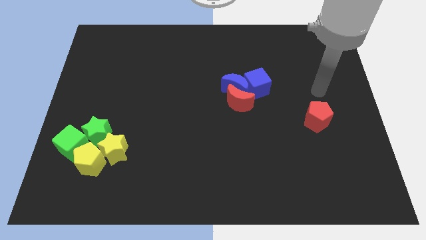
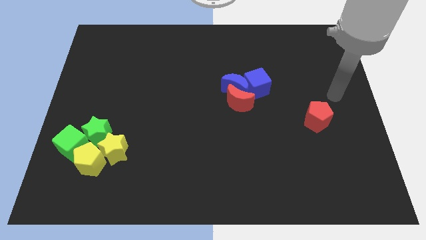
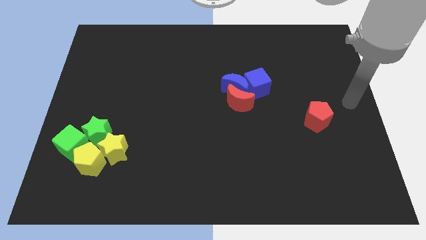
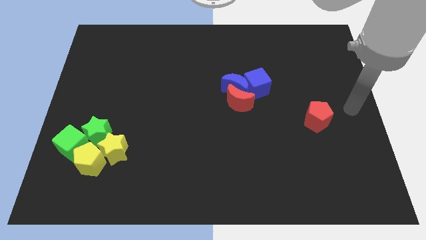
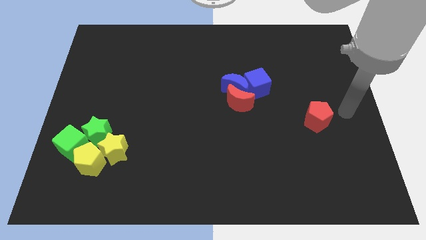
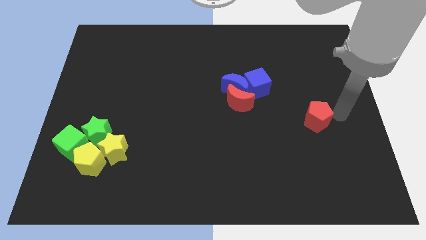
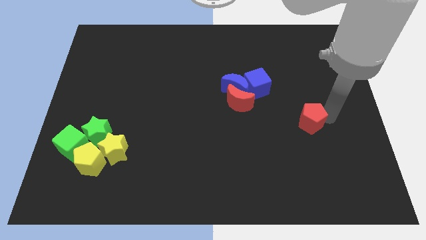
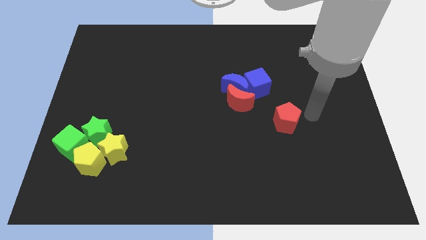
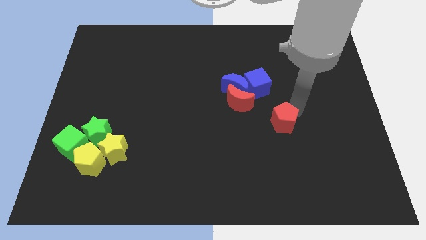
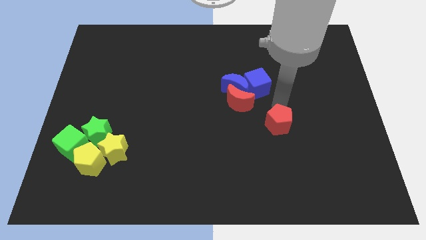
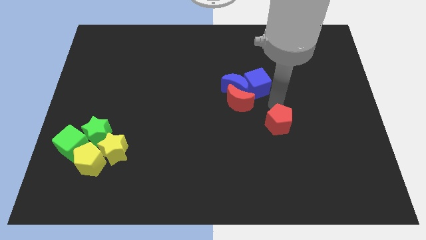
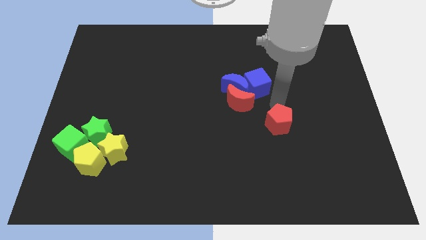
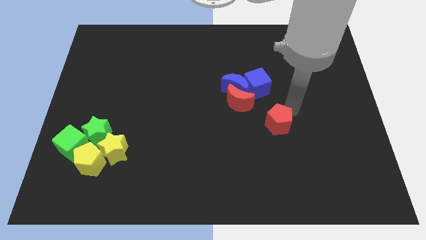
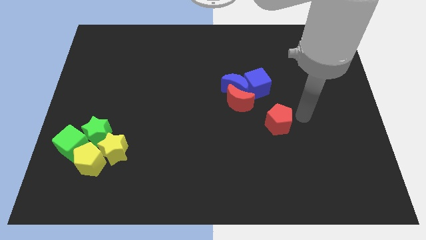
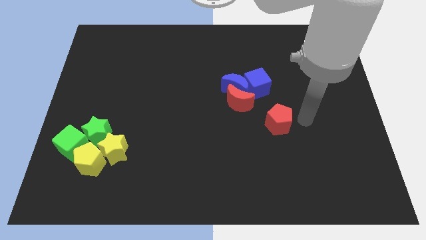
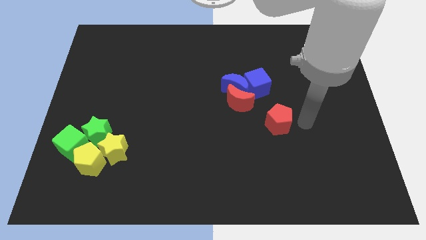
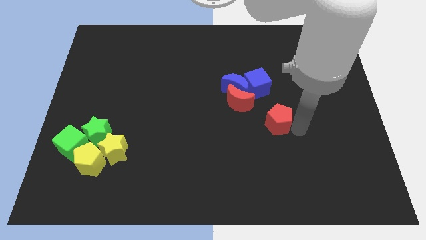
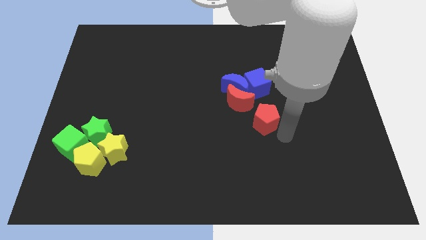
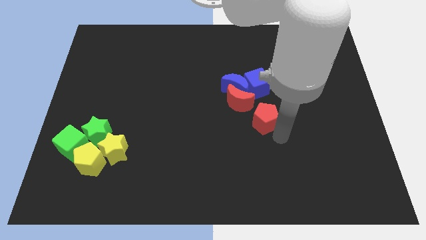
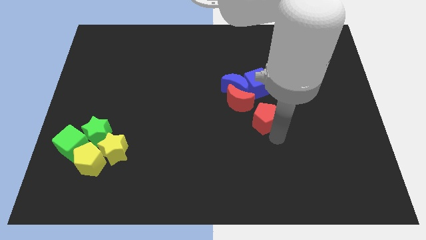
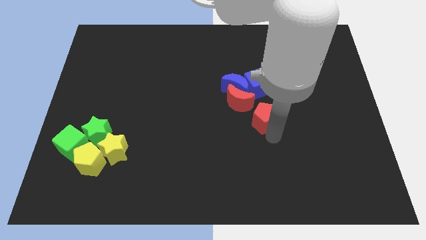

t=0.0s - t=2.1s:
push the red pentagon to the bottom of the blue cube

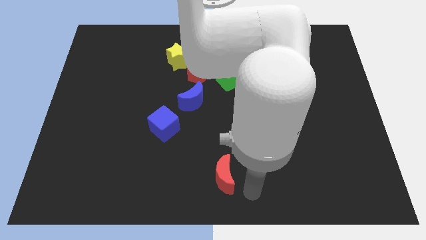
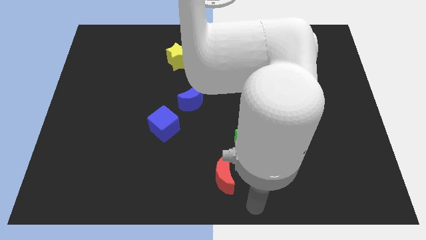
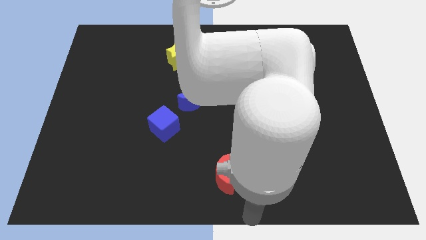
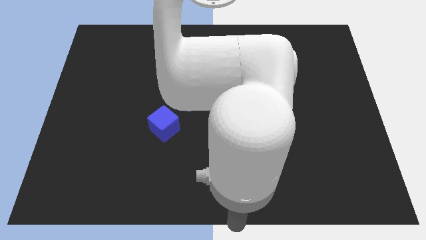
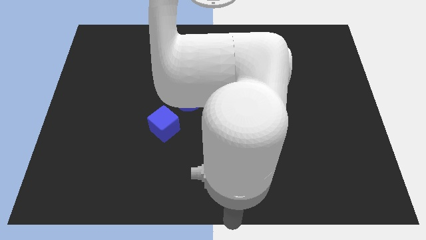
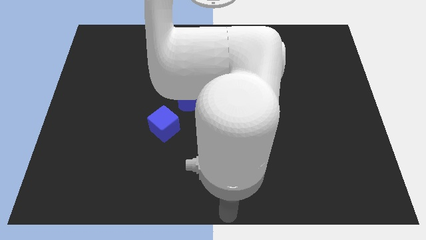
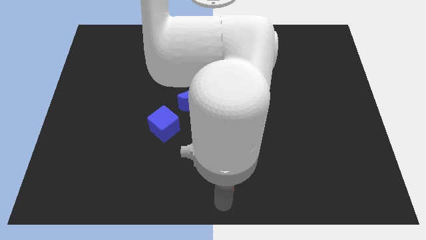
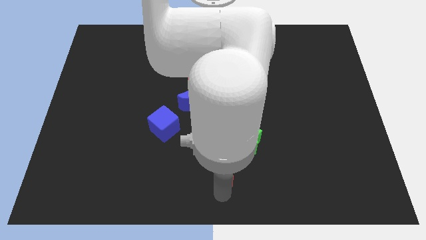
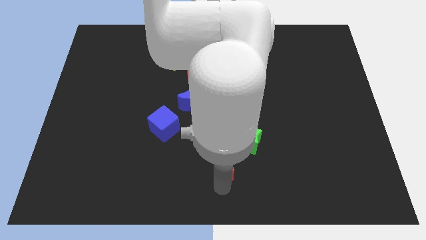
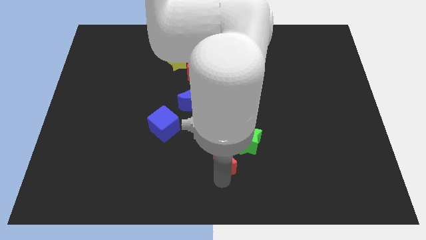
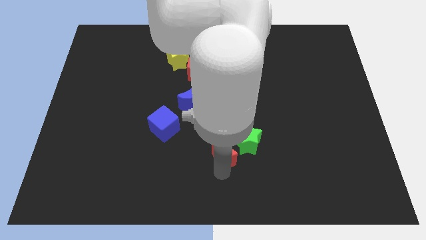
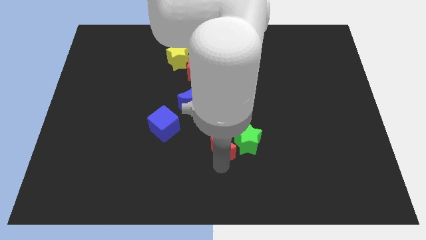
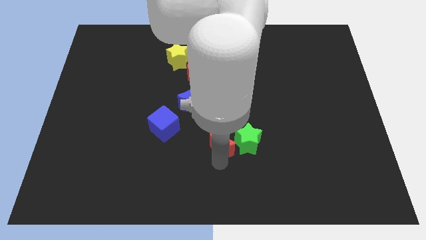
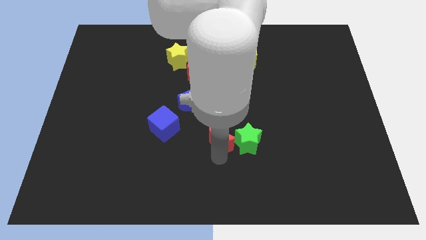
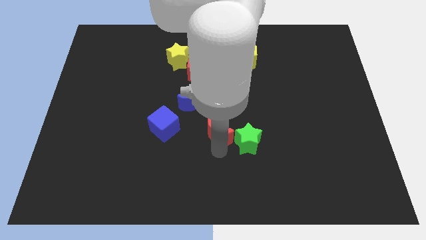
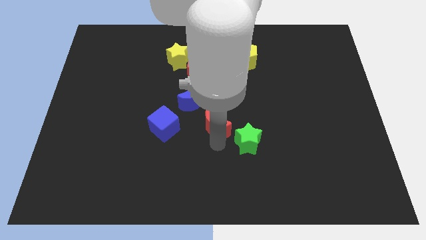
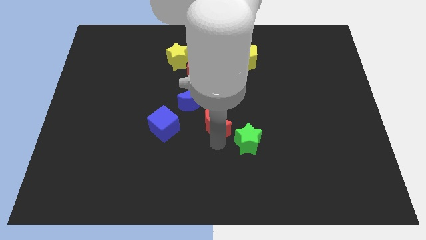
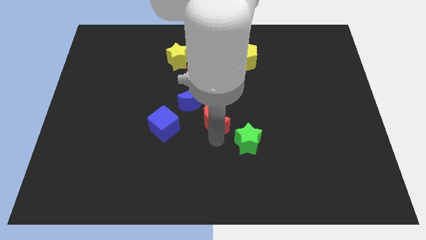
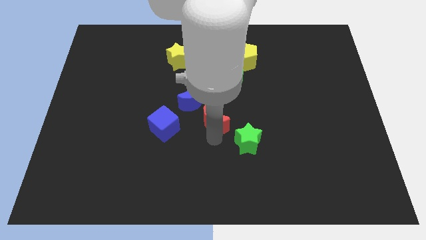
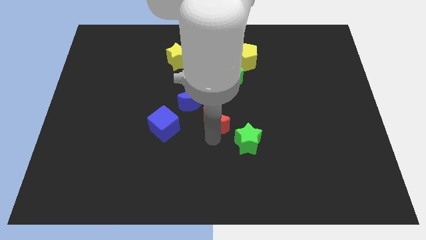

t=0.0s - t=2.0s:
place the red moon towards the center of the board

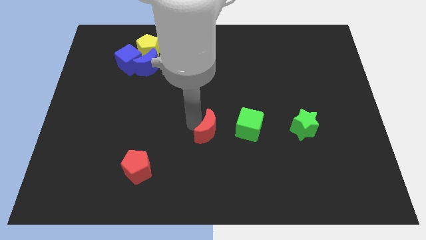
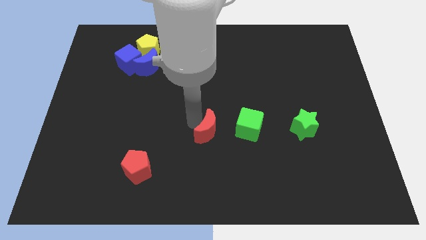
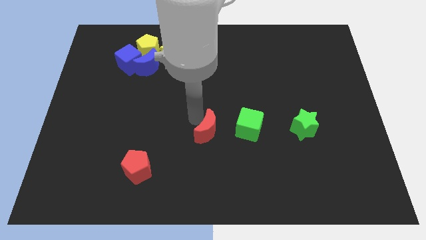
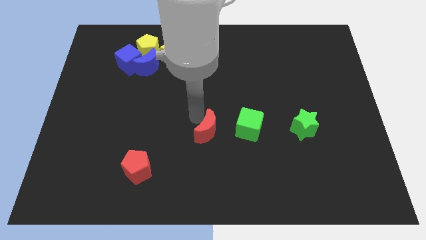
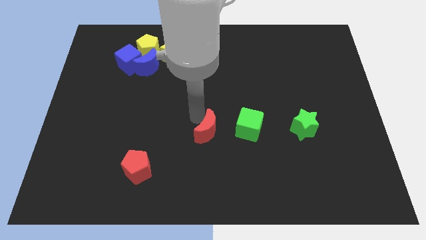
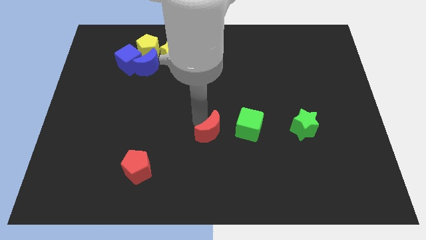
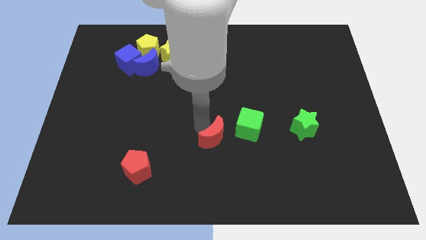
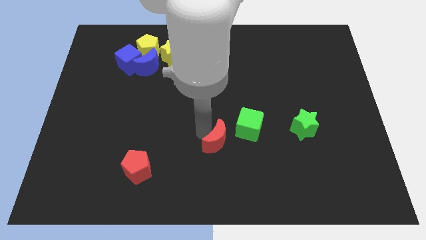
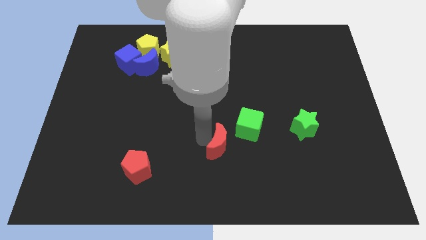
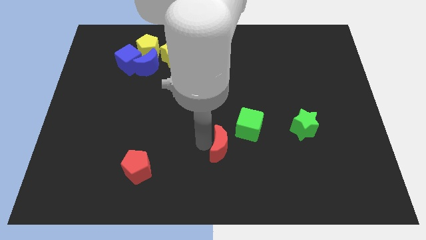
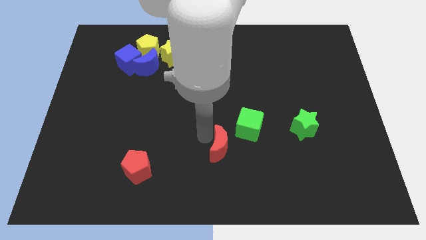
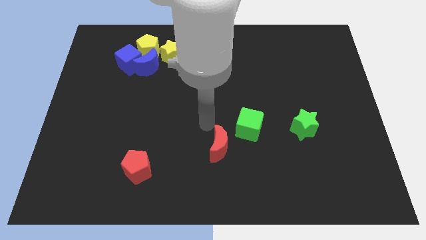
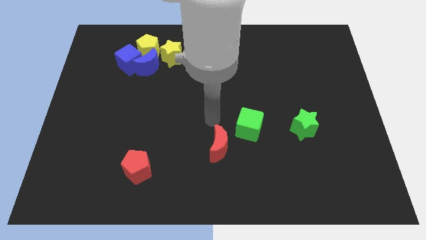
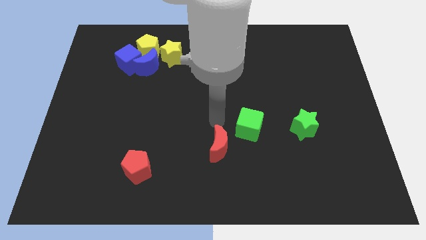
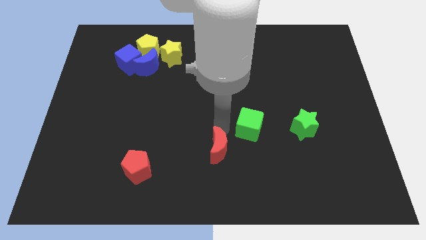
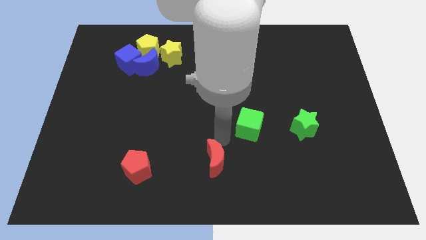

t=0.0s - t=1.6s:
push the red moon towards the bottom

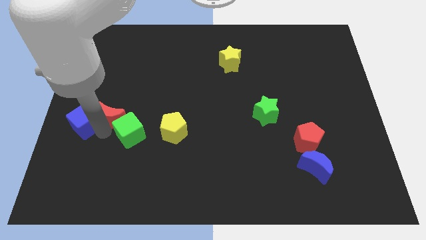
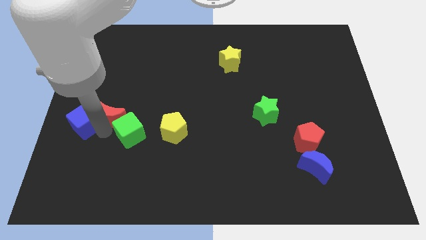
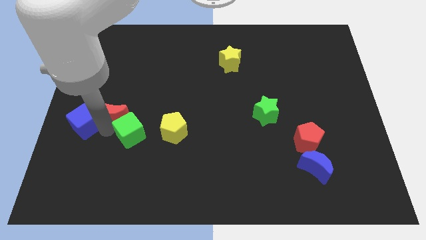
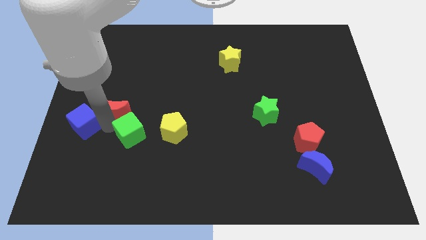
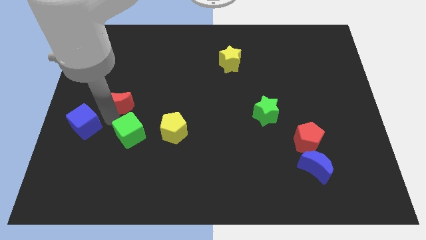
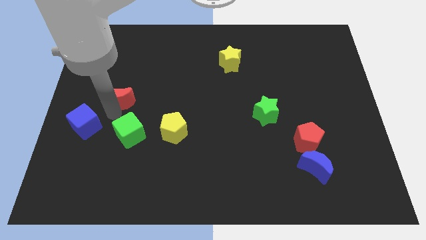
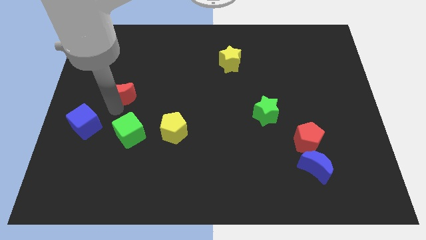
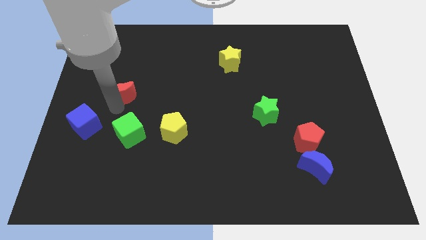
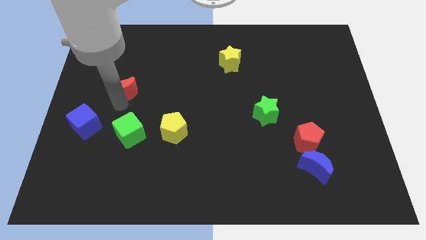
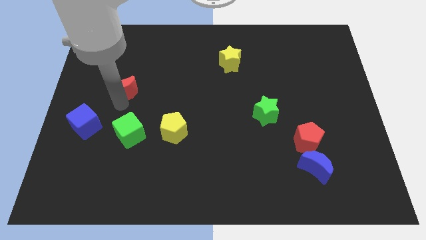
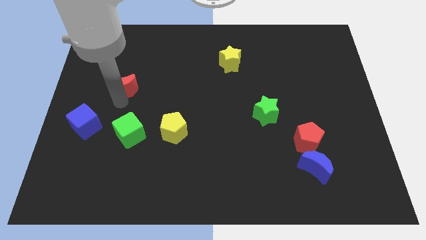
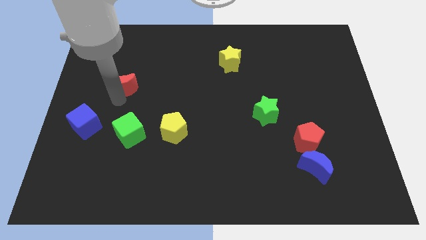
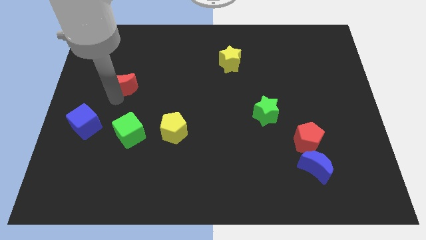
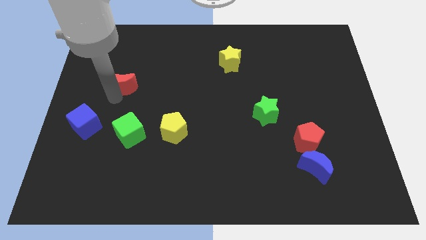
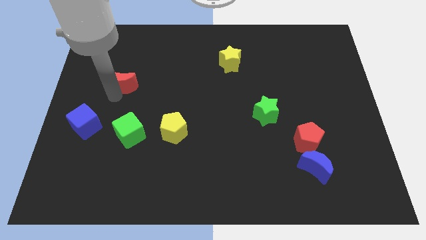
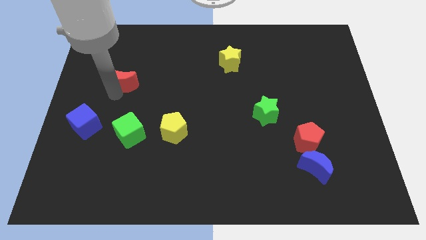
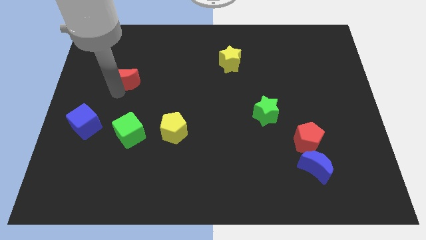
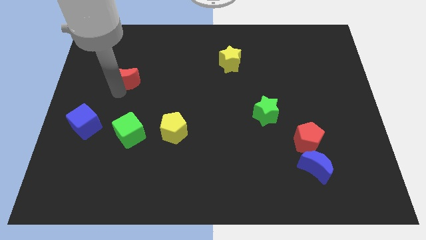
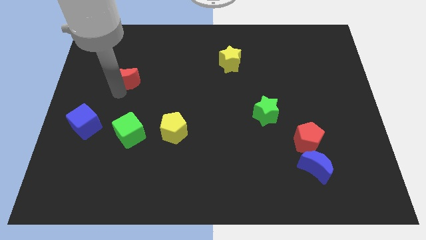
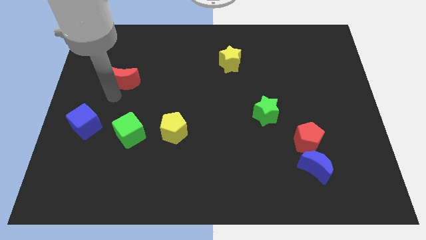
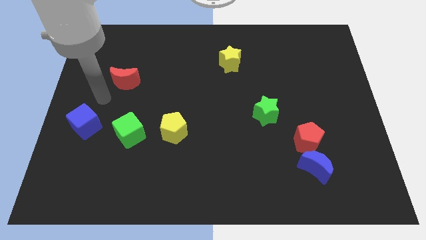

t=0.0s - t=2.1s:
slide the red crescent towards the top of the board

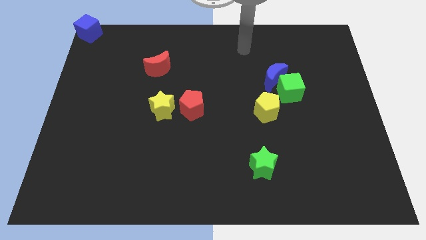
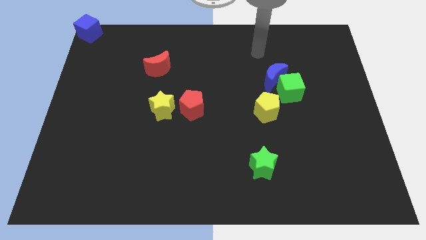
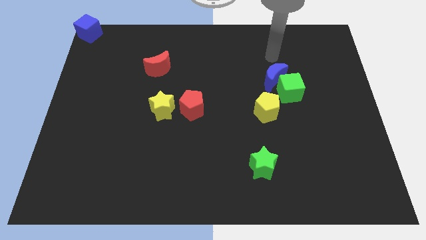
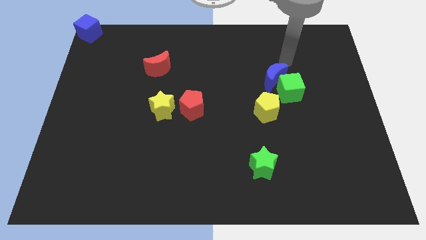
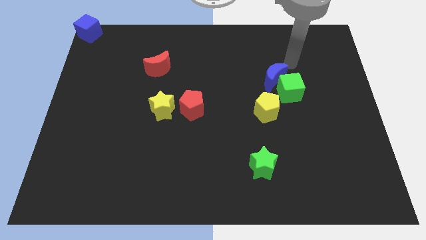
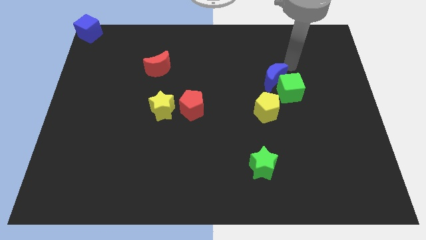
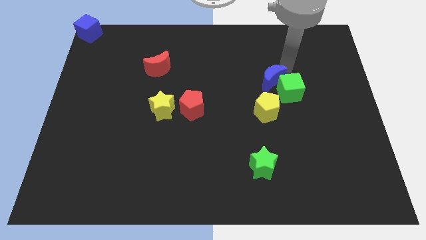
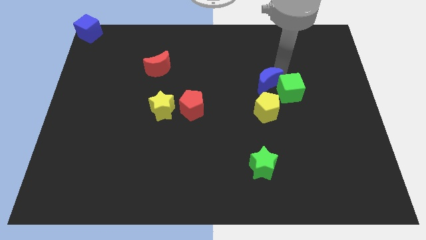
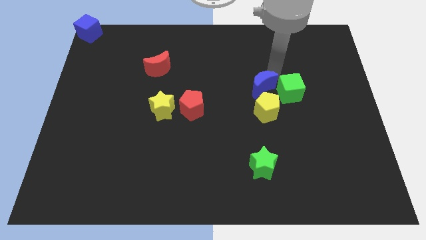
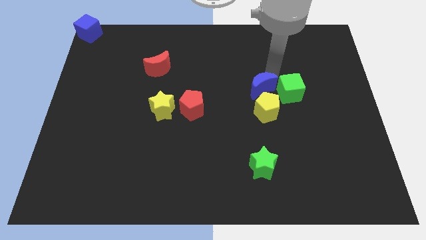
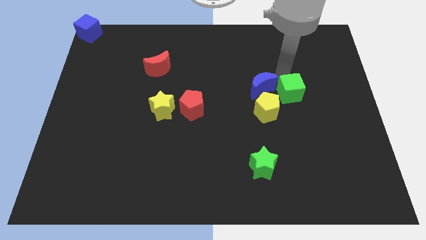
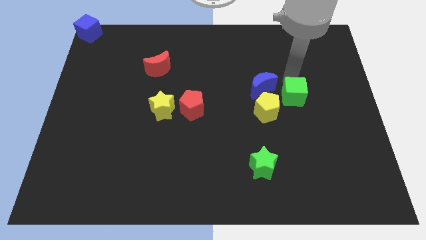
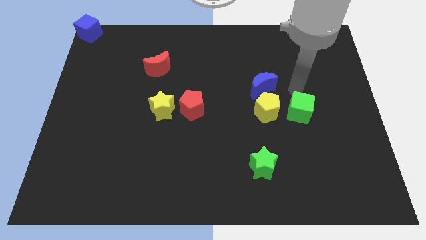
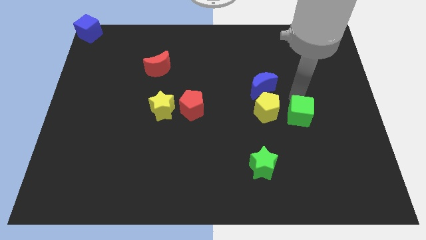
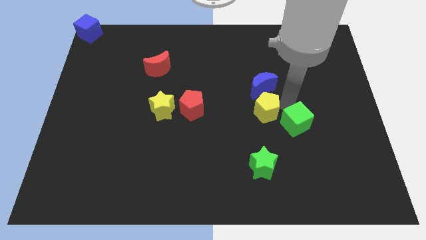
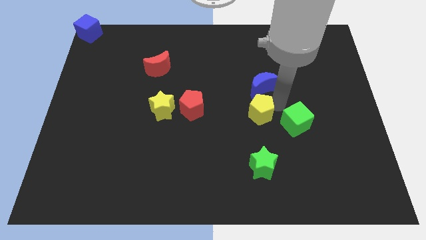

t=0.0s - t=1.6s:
separate the green cube and the blue moon
